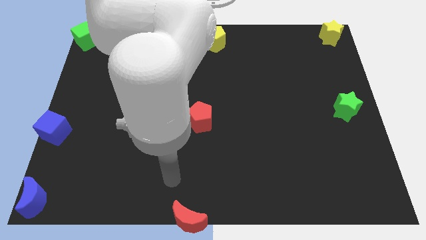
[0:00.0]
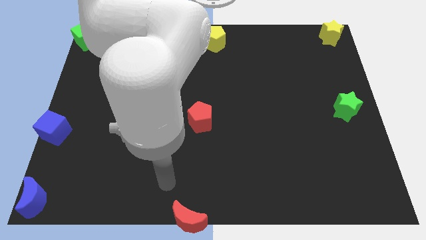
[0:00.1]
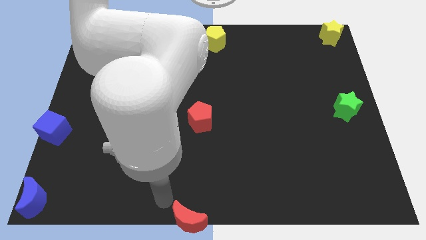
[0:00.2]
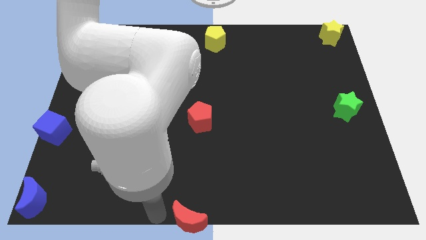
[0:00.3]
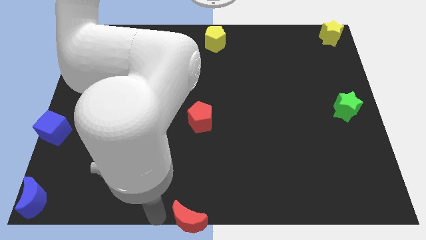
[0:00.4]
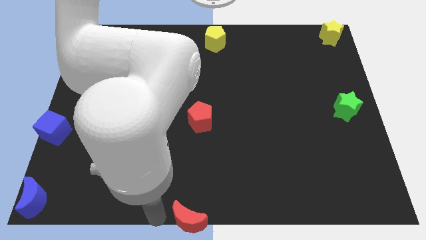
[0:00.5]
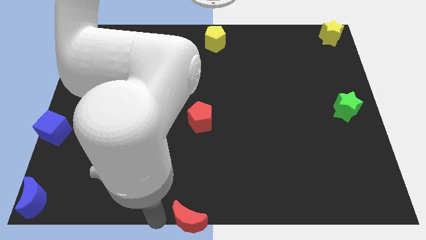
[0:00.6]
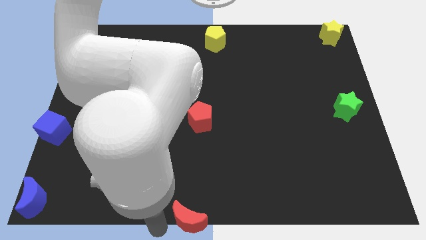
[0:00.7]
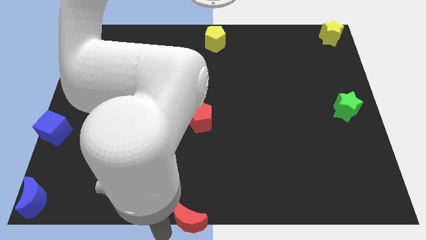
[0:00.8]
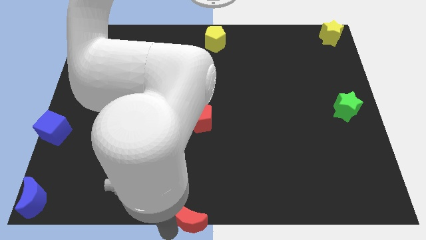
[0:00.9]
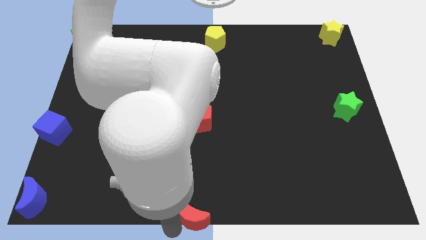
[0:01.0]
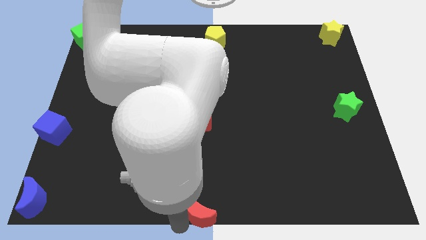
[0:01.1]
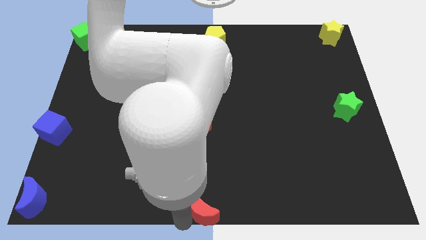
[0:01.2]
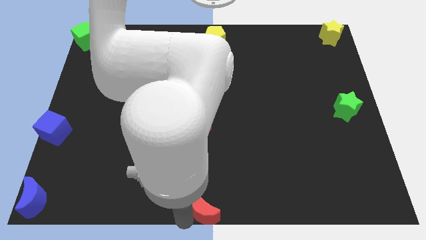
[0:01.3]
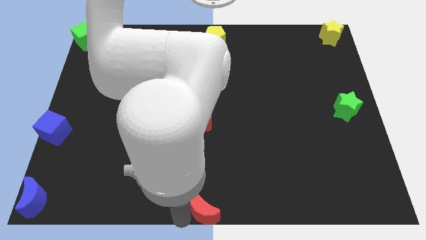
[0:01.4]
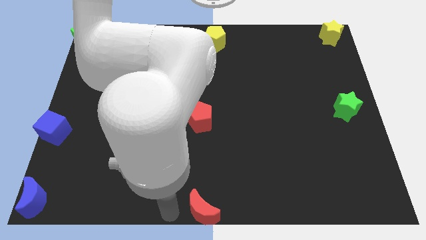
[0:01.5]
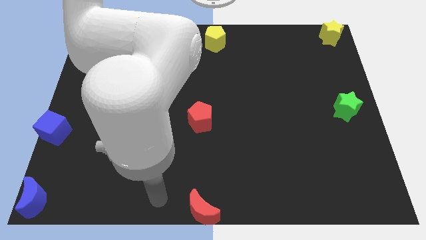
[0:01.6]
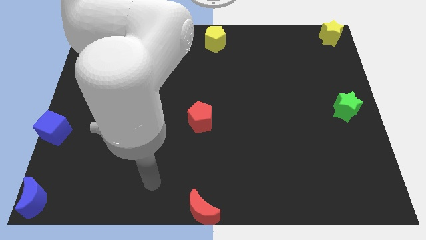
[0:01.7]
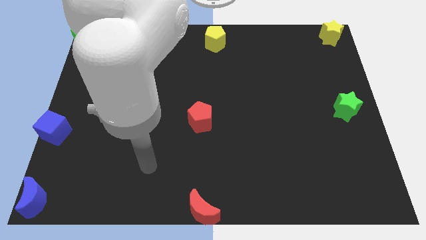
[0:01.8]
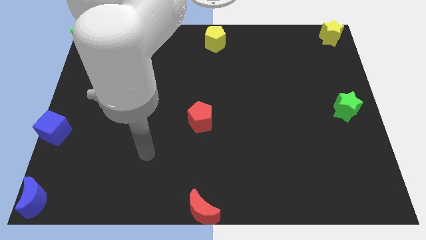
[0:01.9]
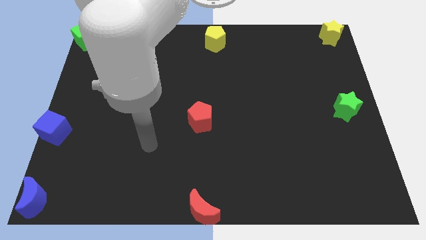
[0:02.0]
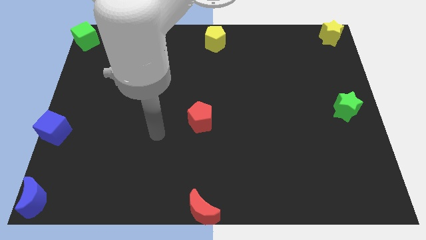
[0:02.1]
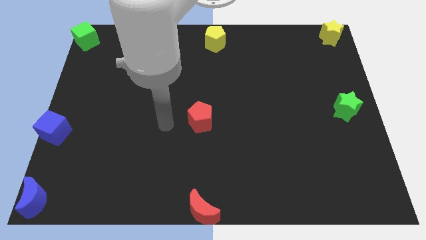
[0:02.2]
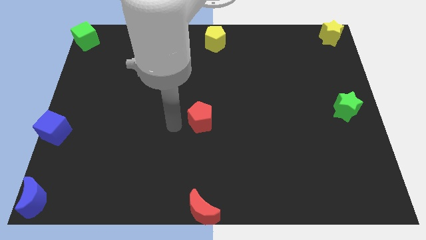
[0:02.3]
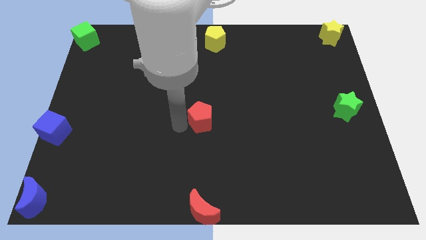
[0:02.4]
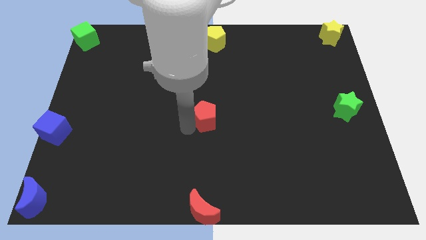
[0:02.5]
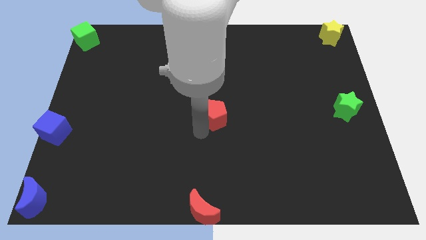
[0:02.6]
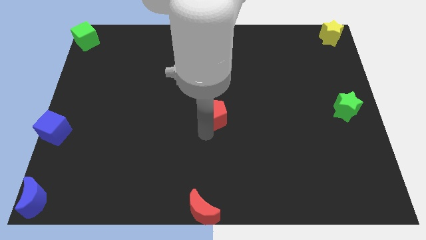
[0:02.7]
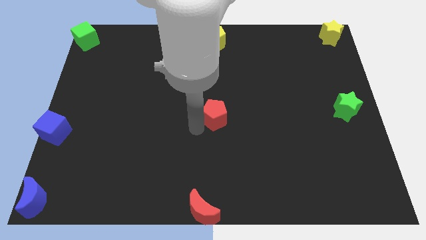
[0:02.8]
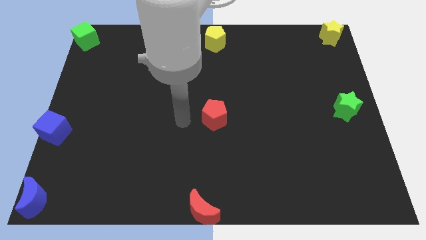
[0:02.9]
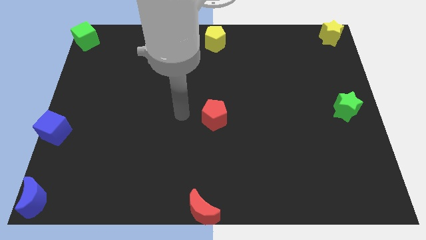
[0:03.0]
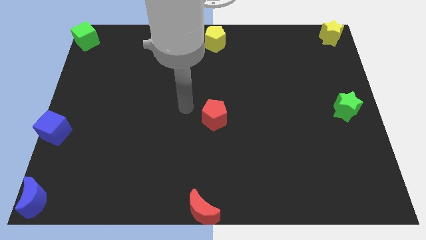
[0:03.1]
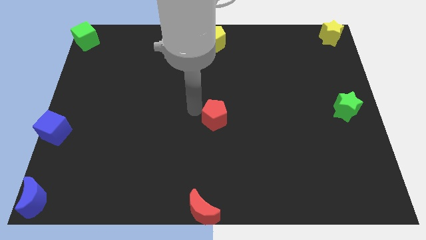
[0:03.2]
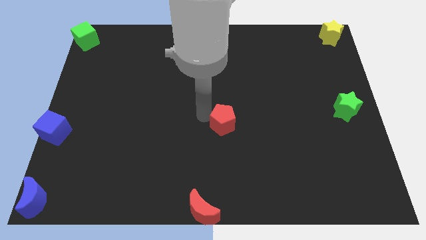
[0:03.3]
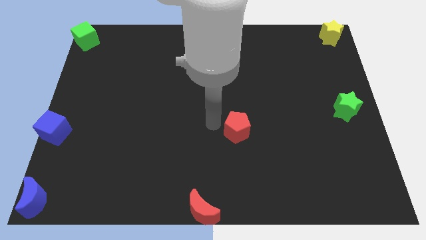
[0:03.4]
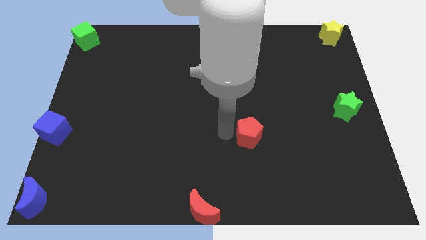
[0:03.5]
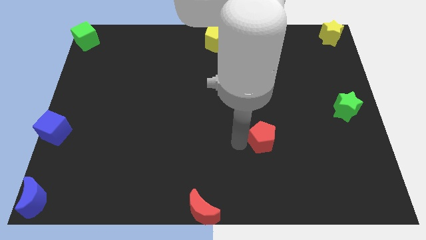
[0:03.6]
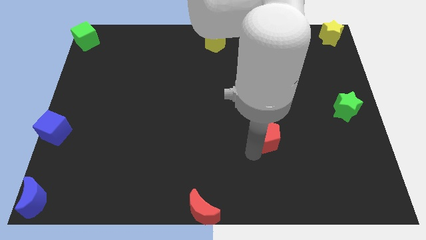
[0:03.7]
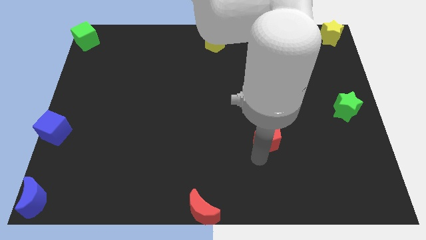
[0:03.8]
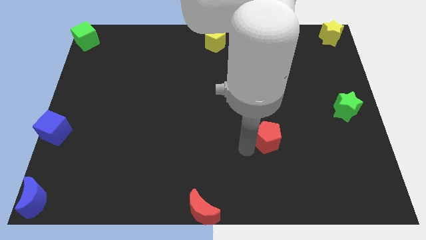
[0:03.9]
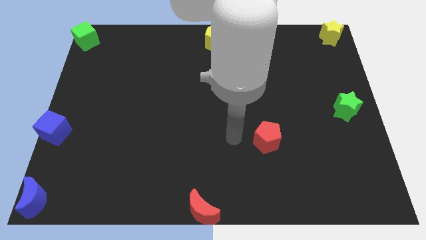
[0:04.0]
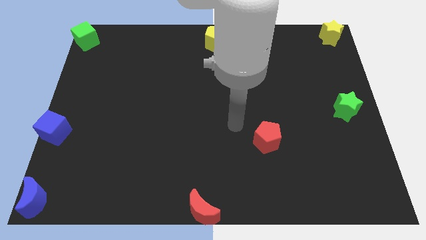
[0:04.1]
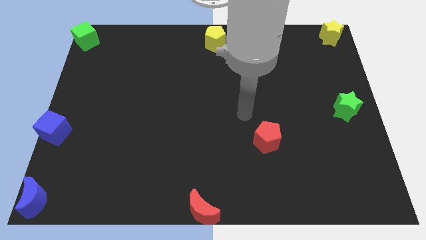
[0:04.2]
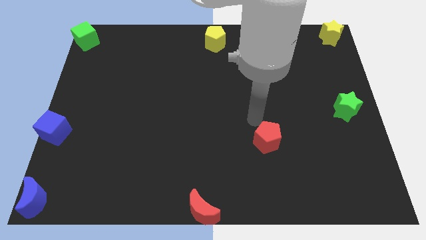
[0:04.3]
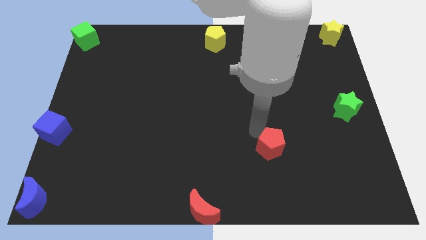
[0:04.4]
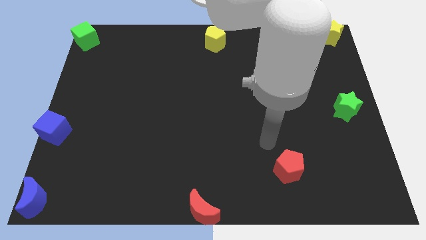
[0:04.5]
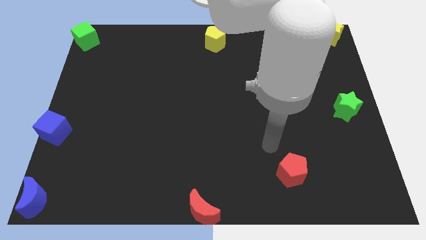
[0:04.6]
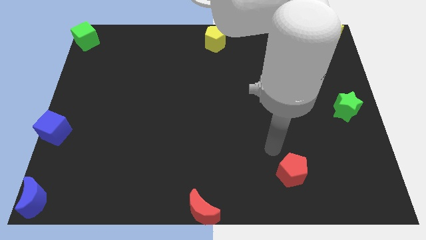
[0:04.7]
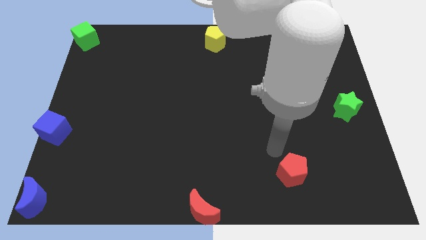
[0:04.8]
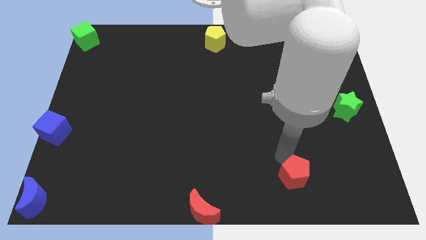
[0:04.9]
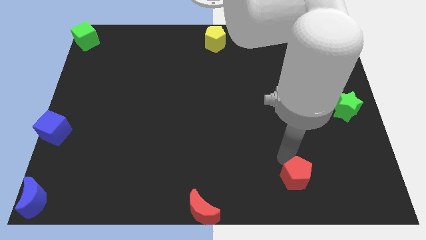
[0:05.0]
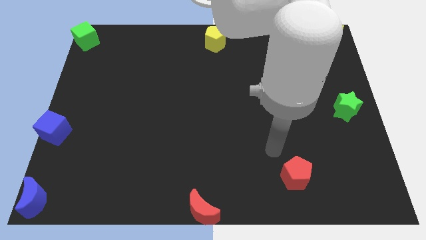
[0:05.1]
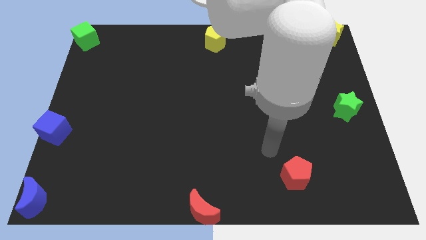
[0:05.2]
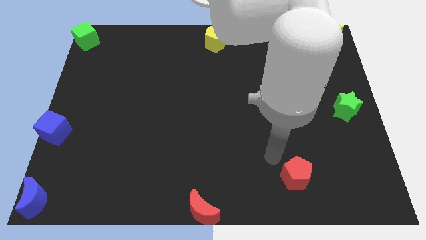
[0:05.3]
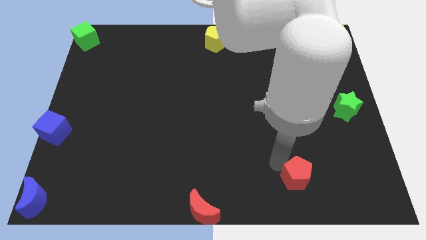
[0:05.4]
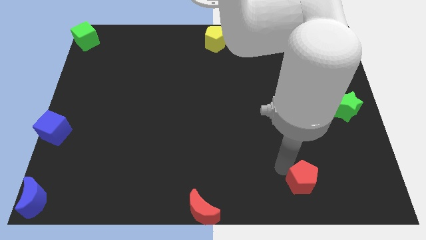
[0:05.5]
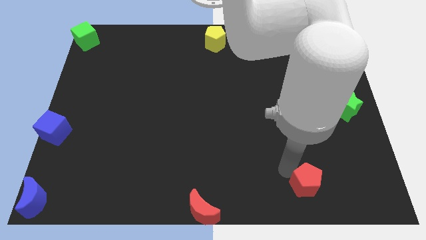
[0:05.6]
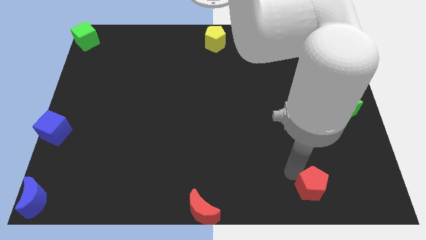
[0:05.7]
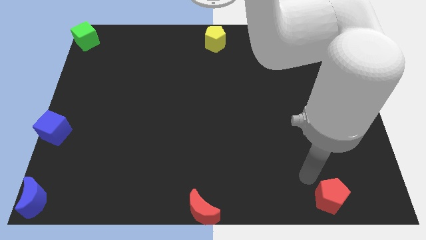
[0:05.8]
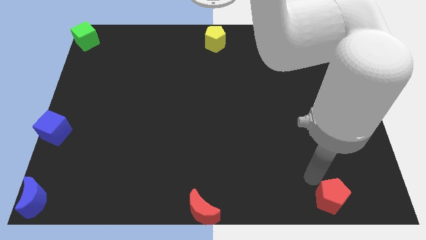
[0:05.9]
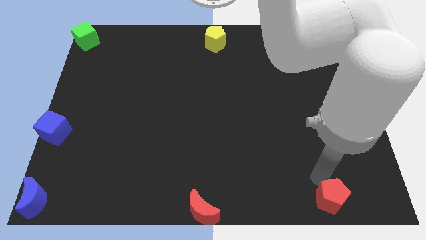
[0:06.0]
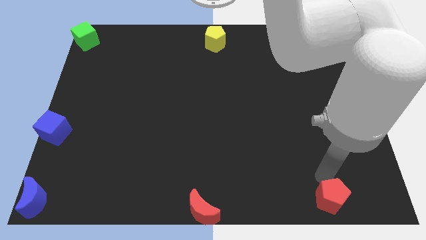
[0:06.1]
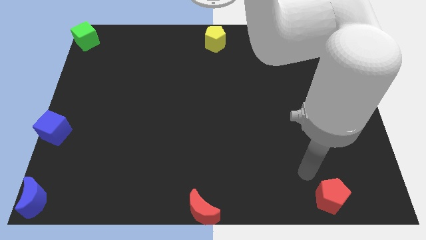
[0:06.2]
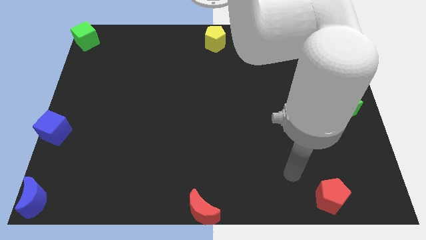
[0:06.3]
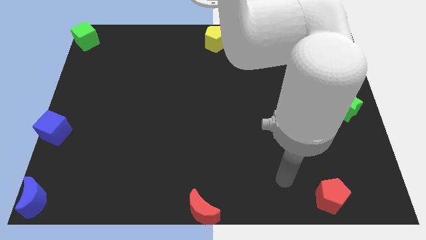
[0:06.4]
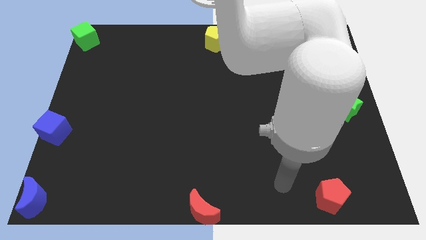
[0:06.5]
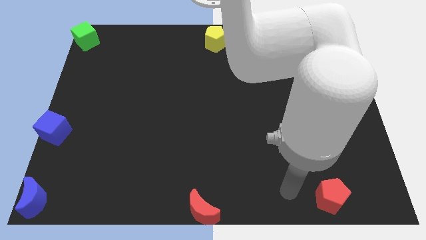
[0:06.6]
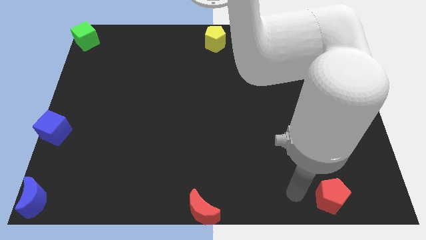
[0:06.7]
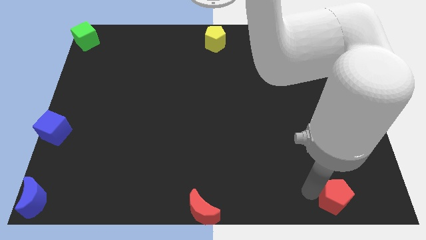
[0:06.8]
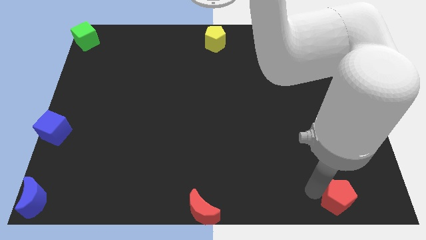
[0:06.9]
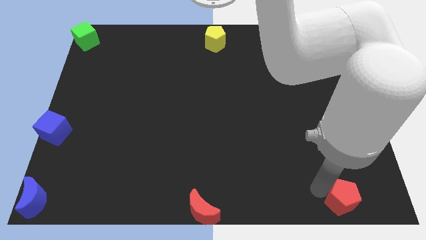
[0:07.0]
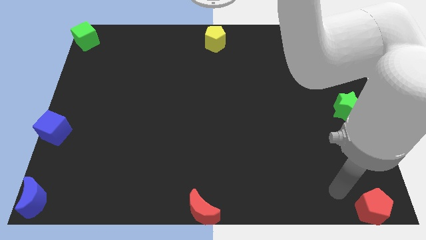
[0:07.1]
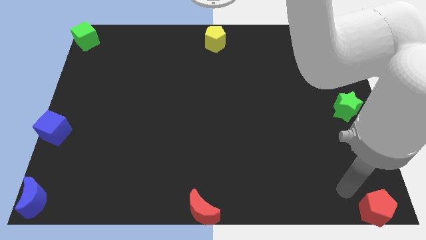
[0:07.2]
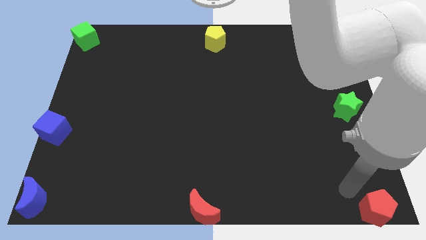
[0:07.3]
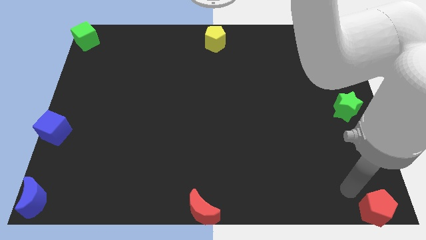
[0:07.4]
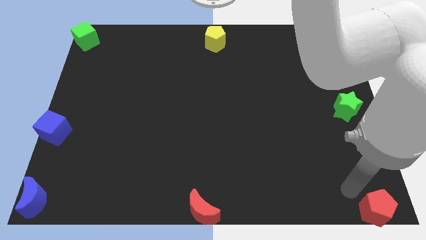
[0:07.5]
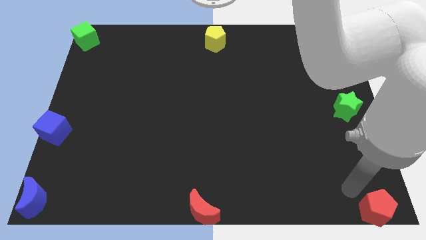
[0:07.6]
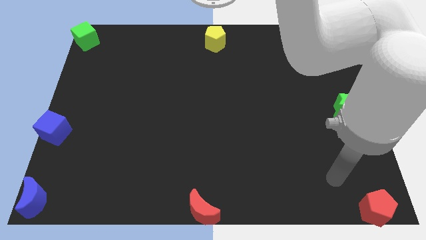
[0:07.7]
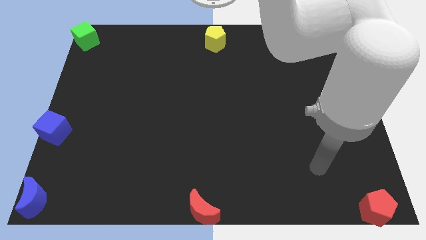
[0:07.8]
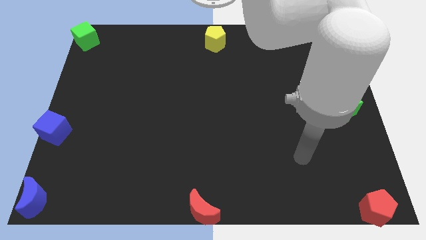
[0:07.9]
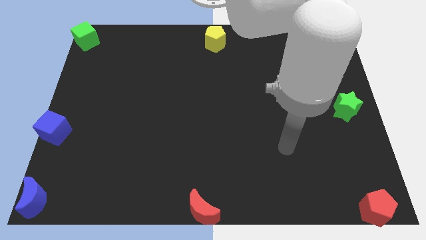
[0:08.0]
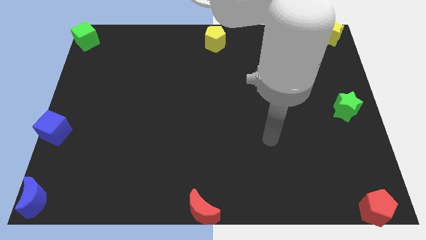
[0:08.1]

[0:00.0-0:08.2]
push the red pentagon to the bottom right corner of the board

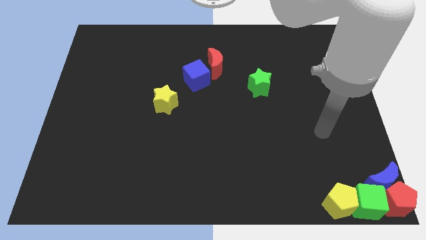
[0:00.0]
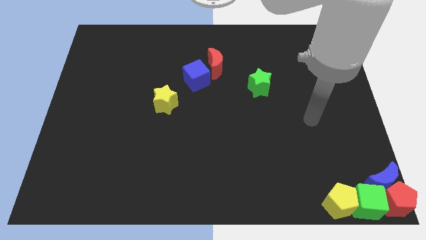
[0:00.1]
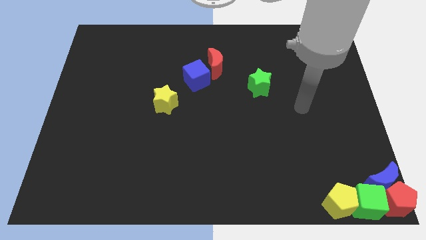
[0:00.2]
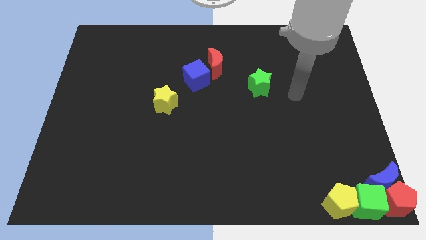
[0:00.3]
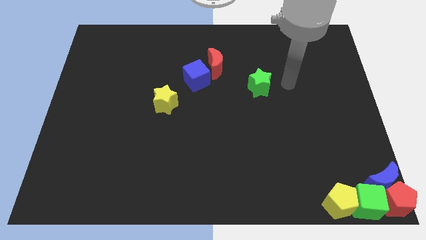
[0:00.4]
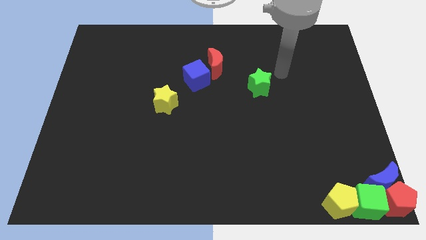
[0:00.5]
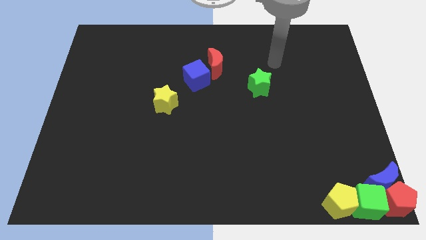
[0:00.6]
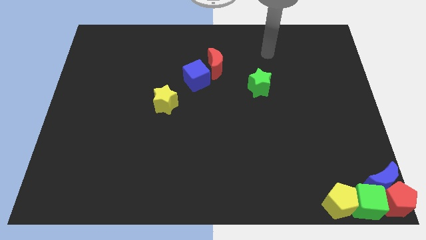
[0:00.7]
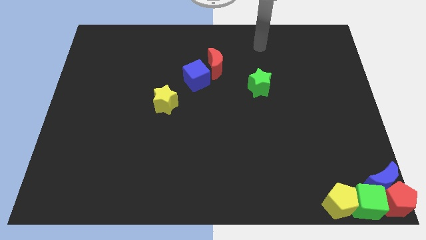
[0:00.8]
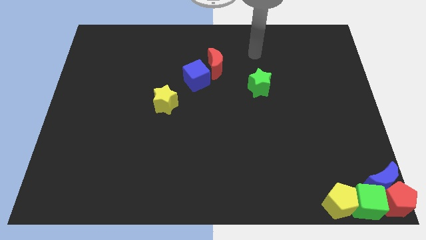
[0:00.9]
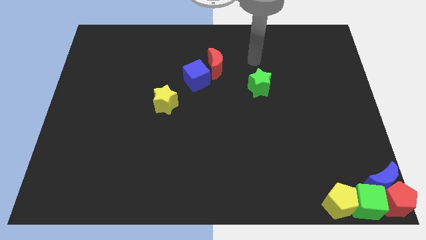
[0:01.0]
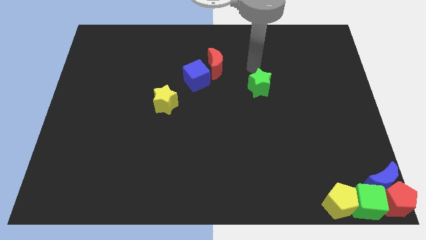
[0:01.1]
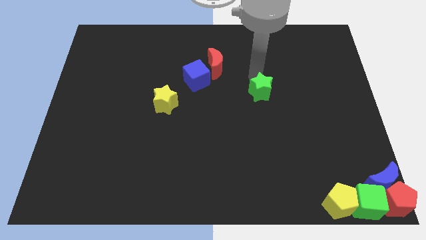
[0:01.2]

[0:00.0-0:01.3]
point your arm at the top of the green star
